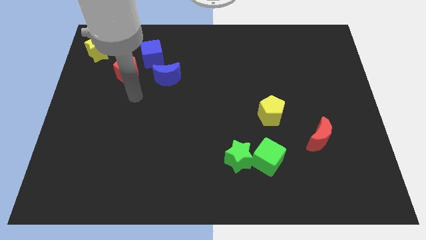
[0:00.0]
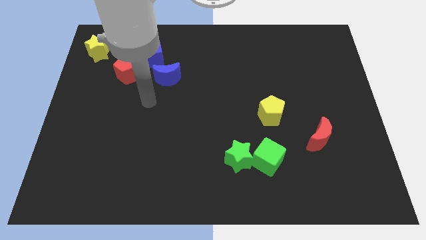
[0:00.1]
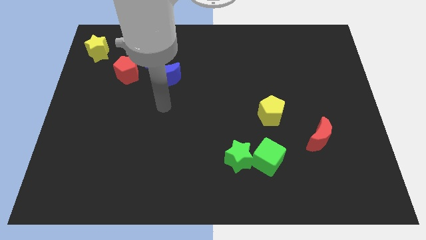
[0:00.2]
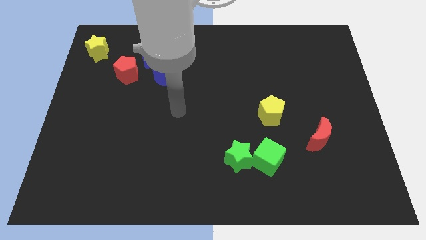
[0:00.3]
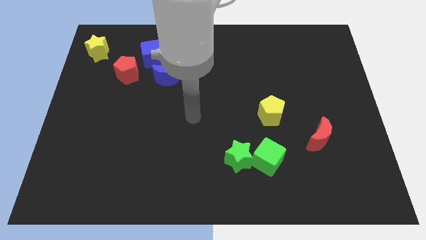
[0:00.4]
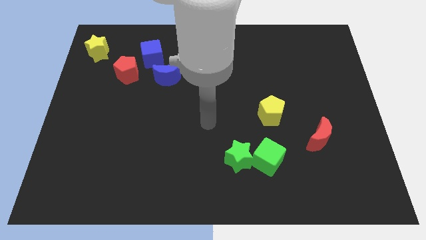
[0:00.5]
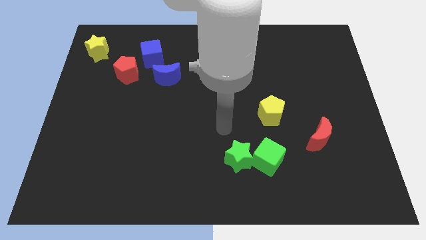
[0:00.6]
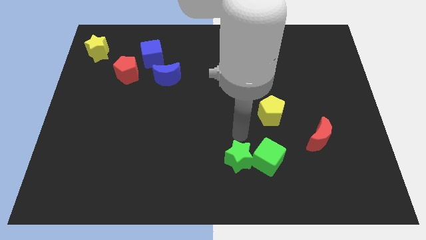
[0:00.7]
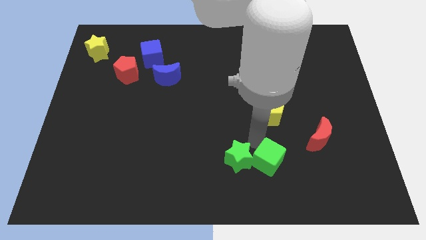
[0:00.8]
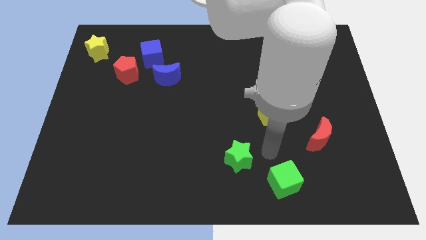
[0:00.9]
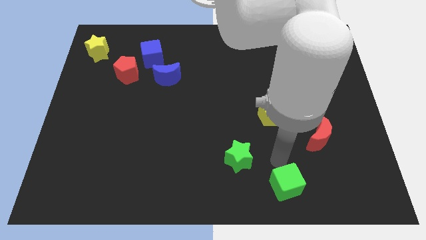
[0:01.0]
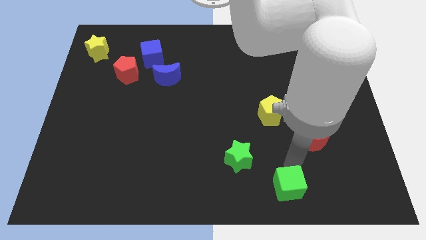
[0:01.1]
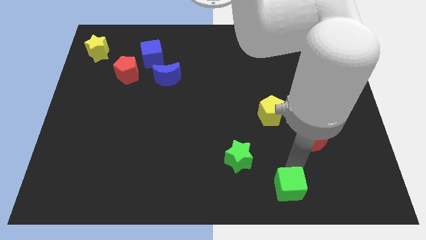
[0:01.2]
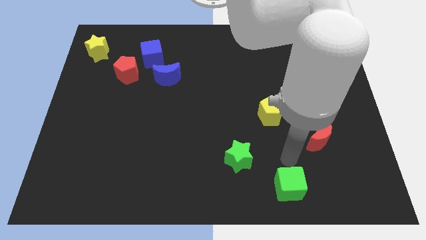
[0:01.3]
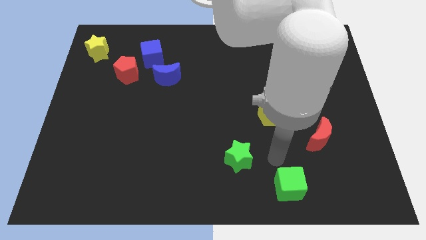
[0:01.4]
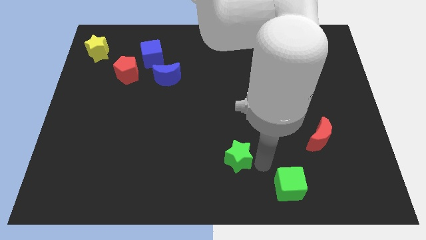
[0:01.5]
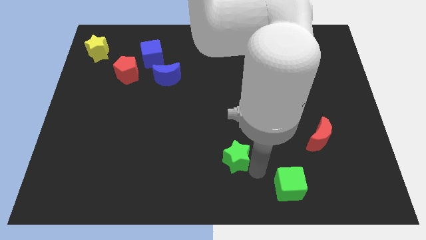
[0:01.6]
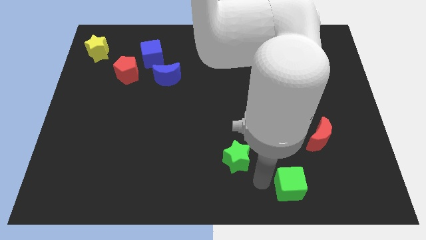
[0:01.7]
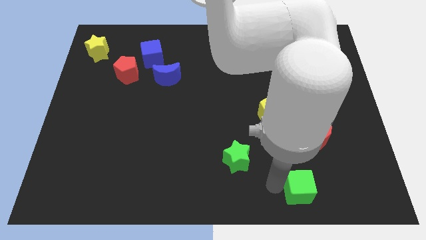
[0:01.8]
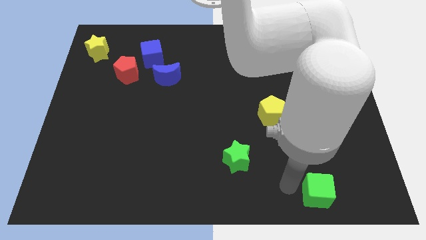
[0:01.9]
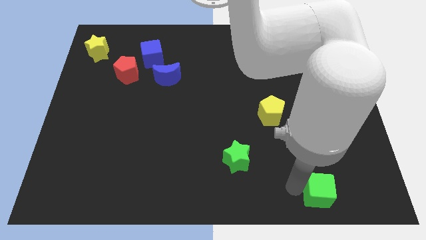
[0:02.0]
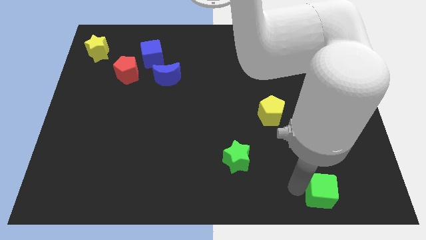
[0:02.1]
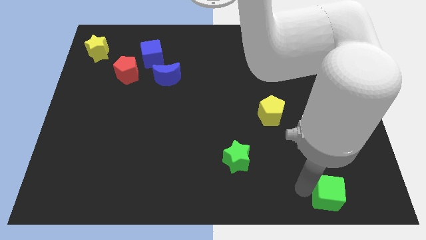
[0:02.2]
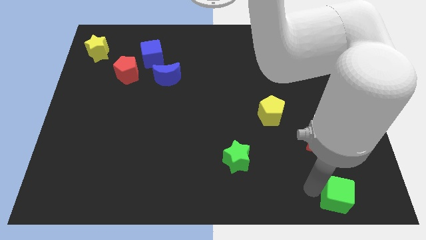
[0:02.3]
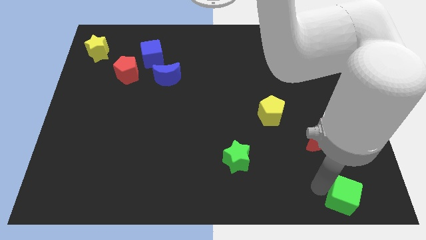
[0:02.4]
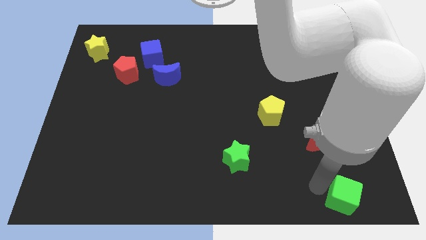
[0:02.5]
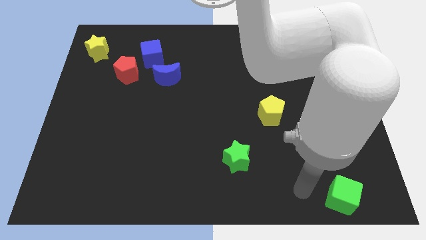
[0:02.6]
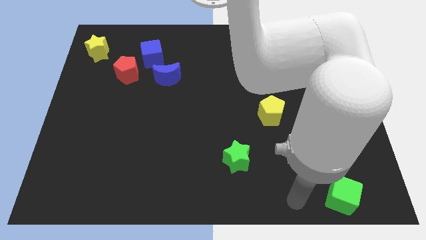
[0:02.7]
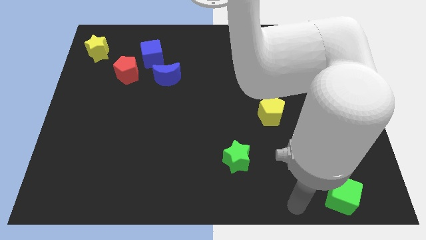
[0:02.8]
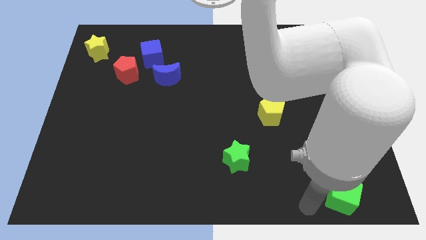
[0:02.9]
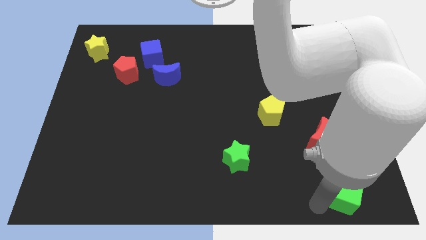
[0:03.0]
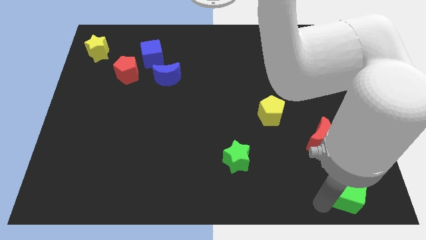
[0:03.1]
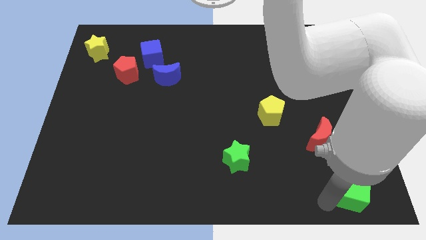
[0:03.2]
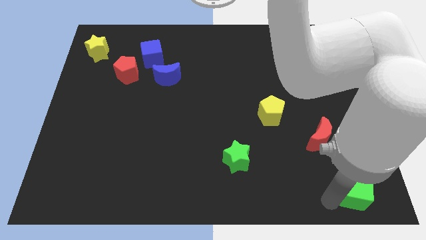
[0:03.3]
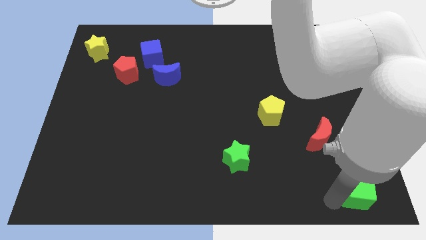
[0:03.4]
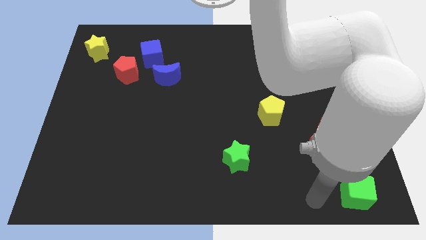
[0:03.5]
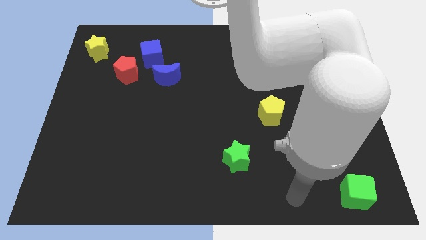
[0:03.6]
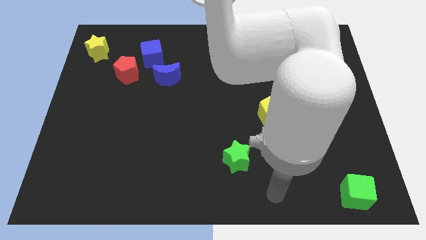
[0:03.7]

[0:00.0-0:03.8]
push the green cube to the bottom right corner of the board

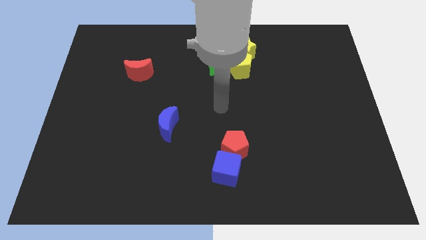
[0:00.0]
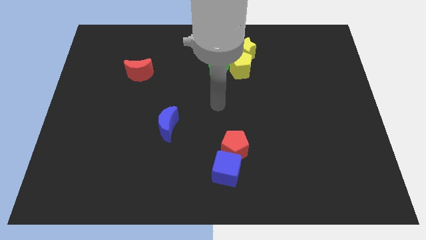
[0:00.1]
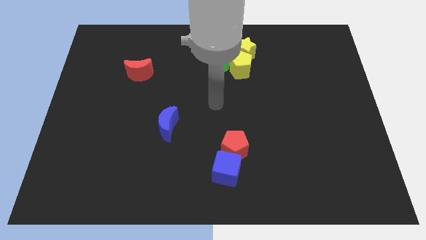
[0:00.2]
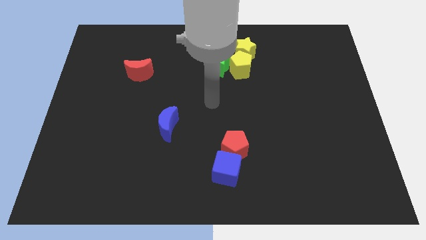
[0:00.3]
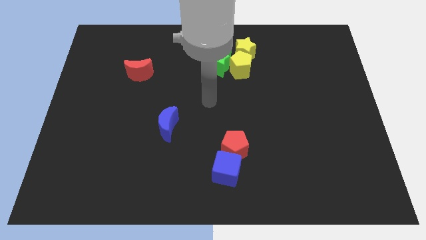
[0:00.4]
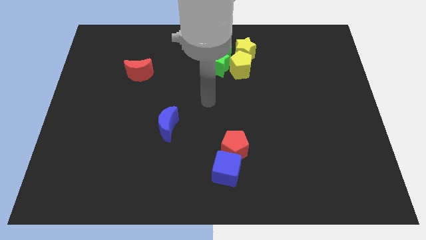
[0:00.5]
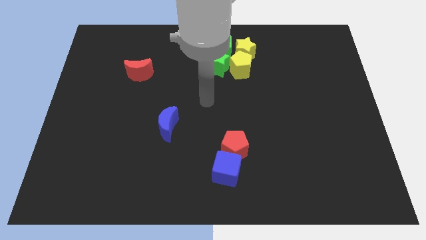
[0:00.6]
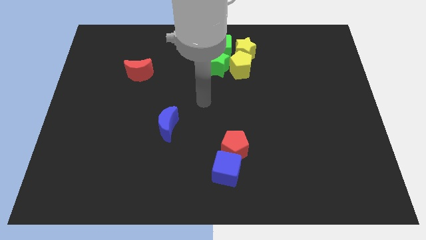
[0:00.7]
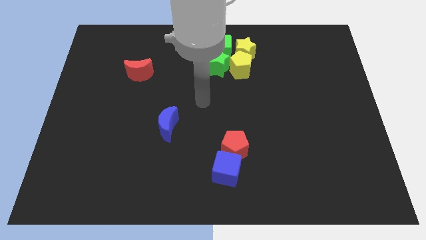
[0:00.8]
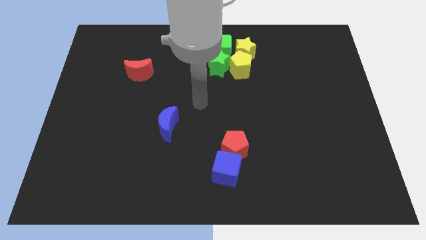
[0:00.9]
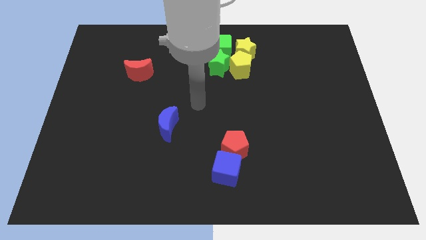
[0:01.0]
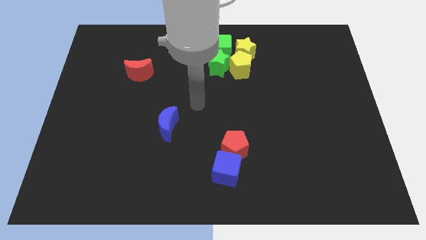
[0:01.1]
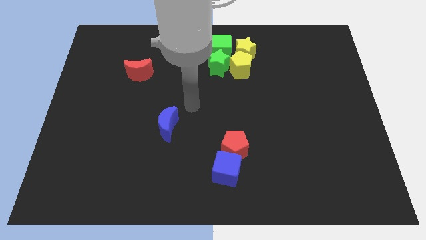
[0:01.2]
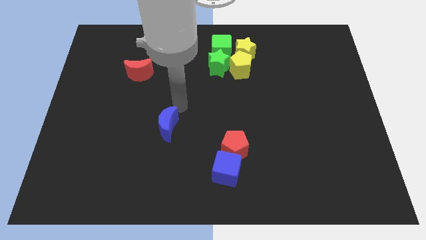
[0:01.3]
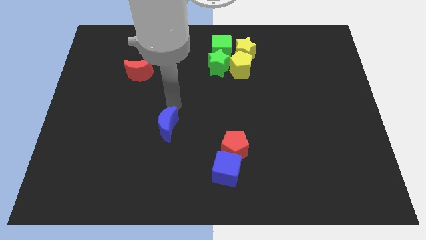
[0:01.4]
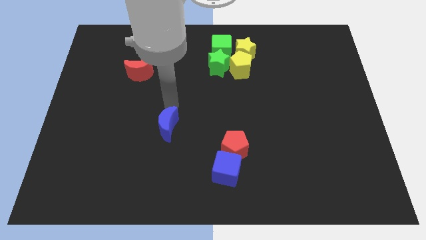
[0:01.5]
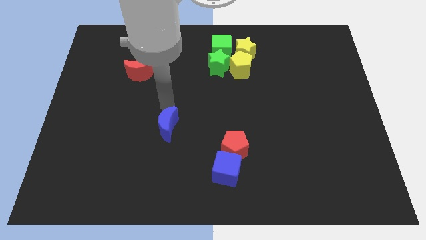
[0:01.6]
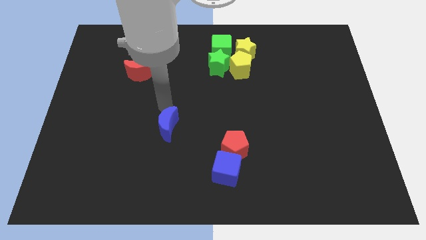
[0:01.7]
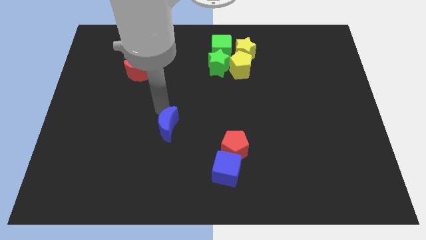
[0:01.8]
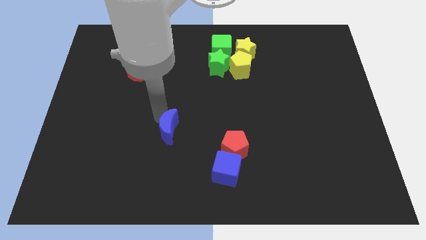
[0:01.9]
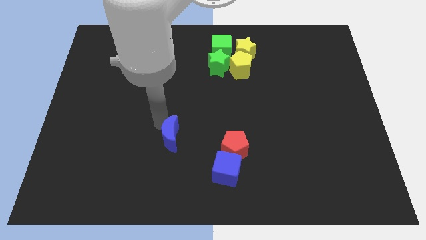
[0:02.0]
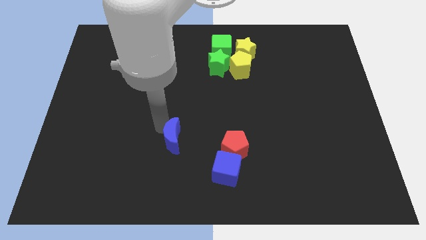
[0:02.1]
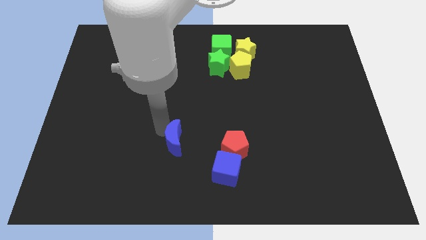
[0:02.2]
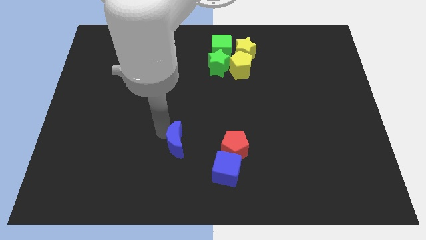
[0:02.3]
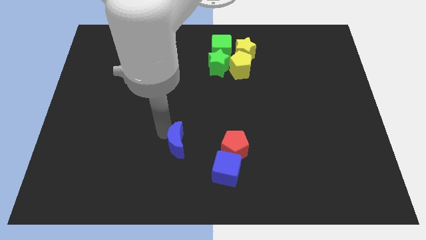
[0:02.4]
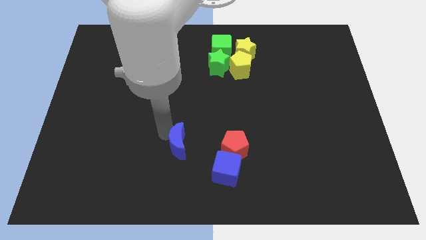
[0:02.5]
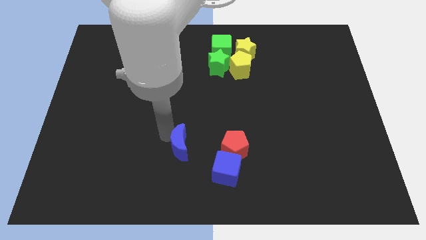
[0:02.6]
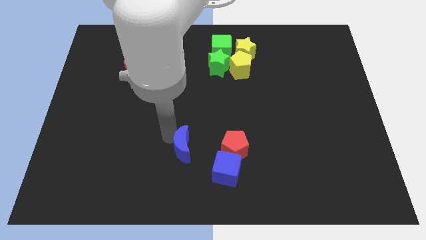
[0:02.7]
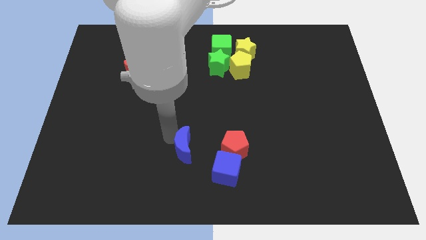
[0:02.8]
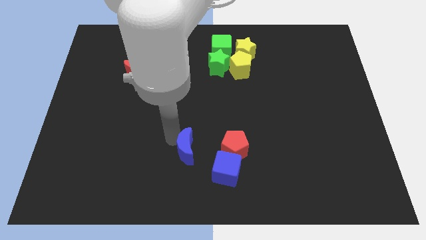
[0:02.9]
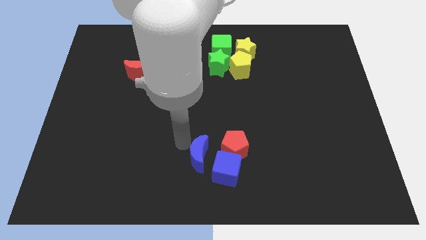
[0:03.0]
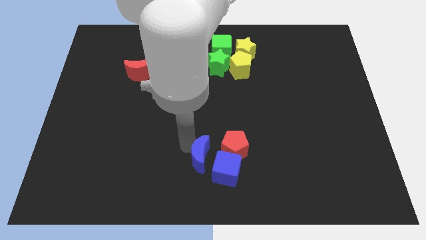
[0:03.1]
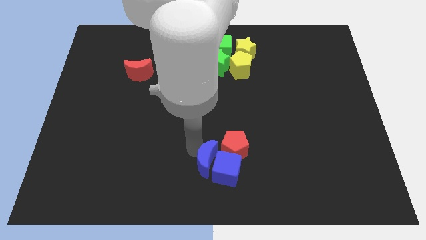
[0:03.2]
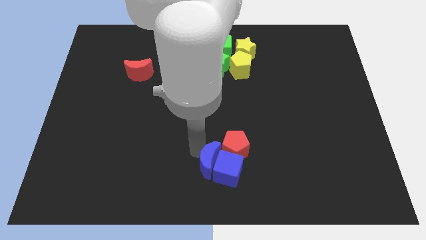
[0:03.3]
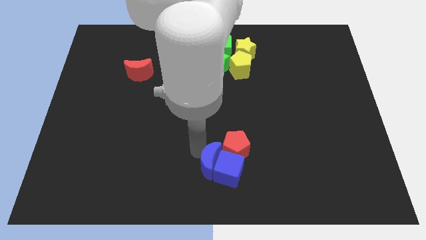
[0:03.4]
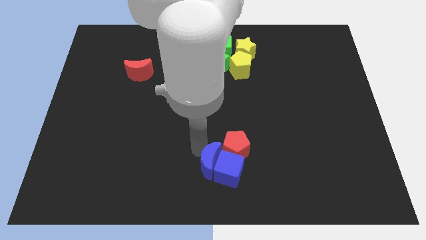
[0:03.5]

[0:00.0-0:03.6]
move the blue moon into the group of blocks

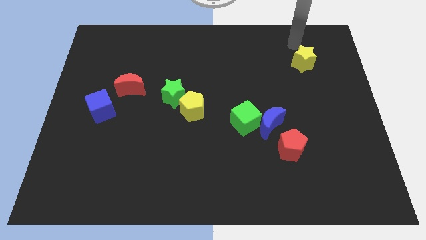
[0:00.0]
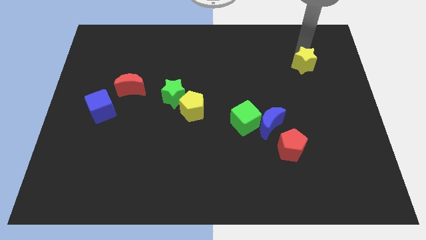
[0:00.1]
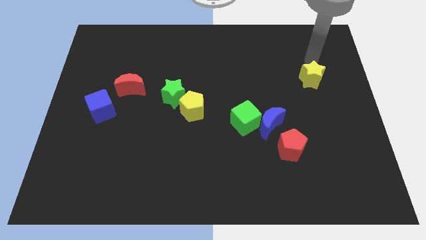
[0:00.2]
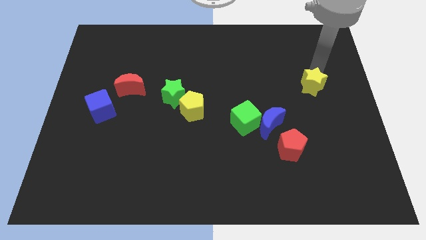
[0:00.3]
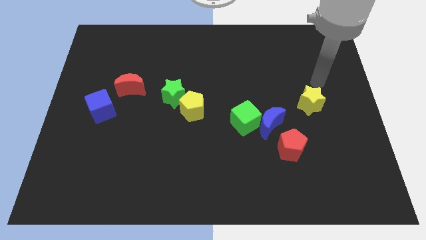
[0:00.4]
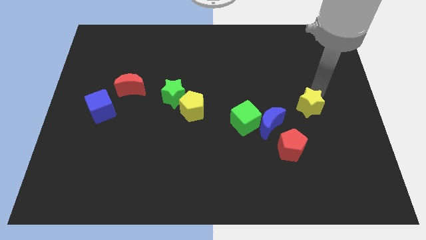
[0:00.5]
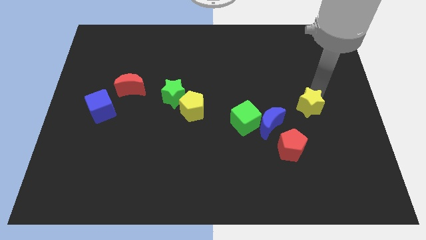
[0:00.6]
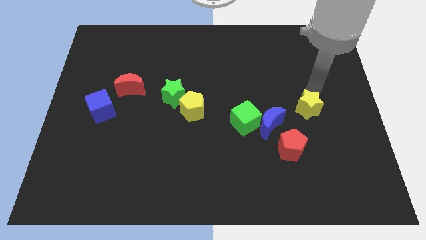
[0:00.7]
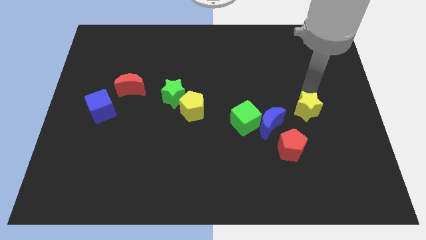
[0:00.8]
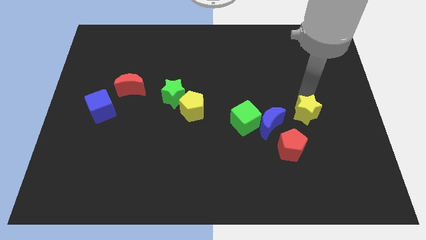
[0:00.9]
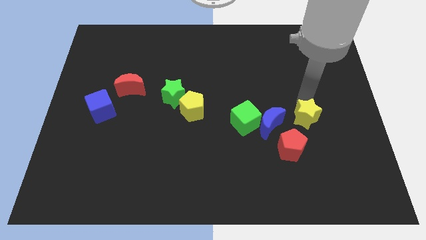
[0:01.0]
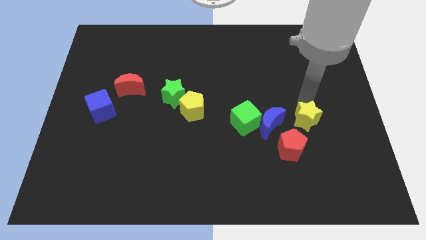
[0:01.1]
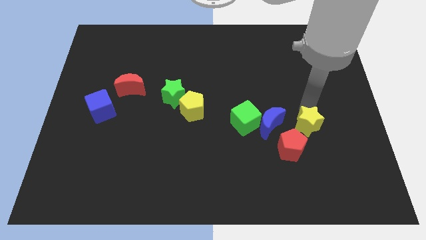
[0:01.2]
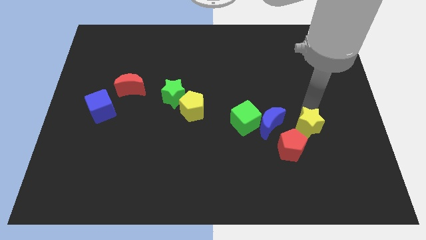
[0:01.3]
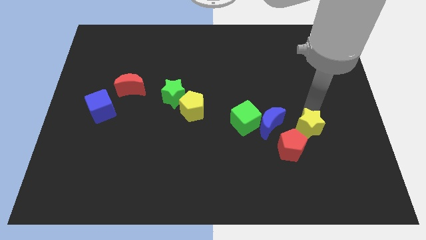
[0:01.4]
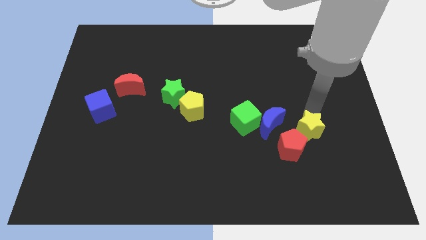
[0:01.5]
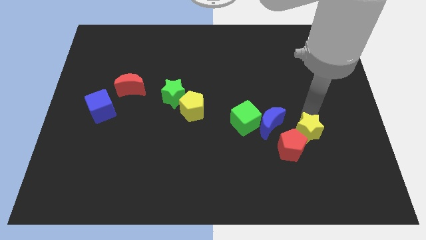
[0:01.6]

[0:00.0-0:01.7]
place the yellow star diagonally at the top right of the red pentagon
